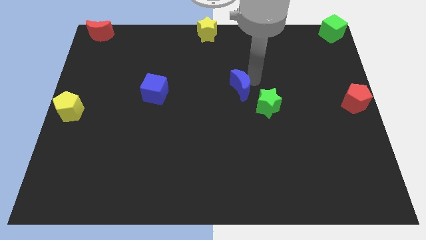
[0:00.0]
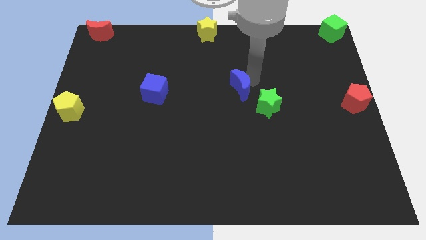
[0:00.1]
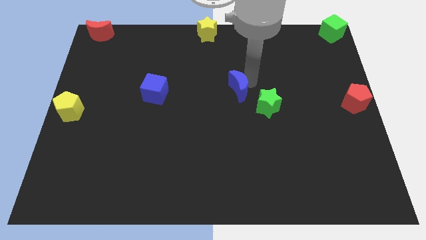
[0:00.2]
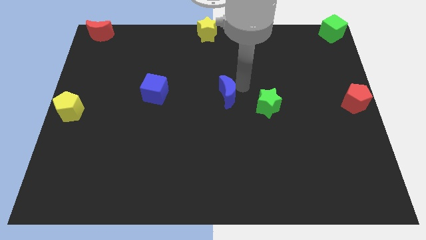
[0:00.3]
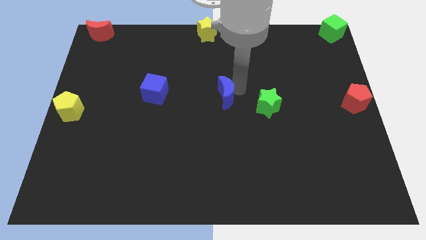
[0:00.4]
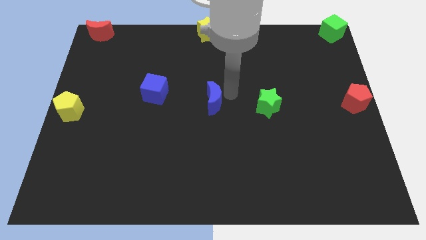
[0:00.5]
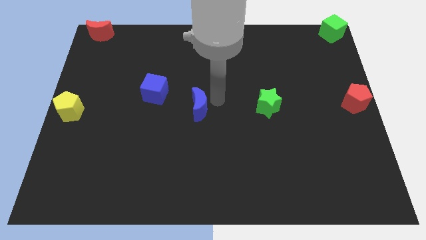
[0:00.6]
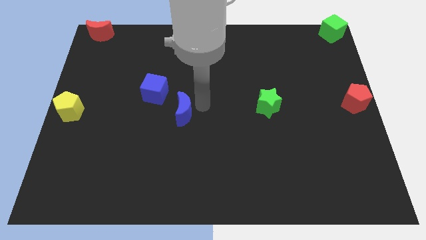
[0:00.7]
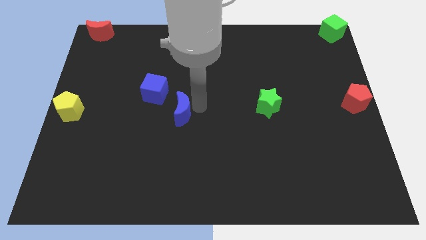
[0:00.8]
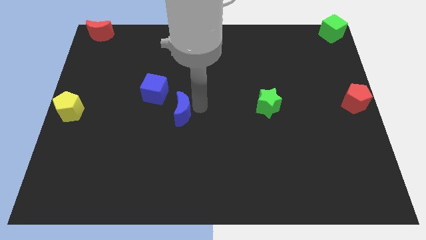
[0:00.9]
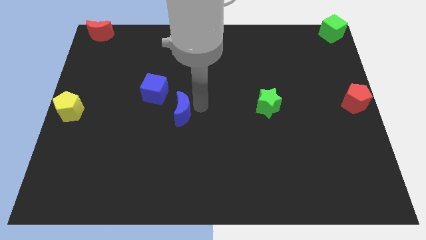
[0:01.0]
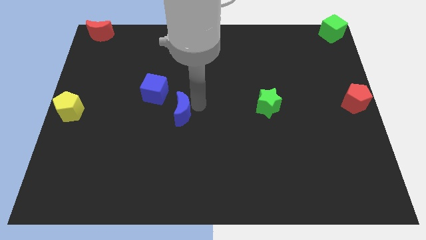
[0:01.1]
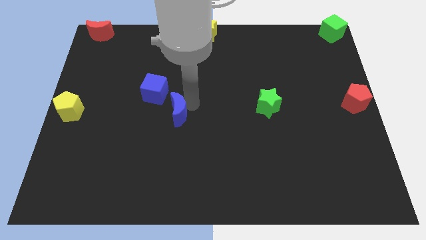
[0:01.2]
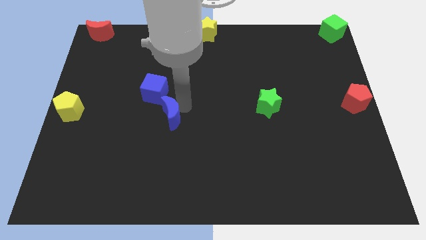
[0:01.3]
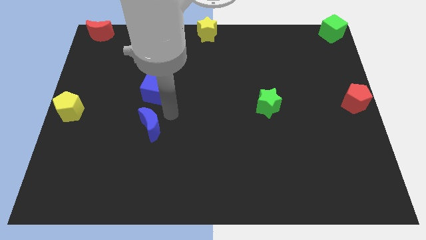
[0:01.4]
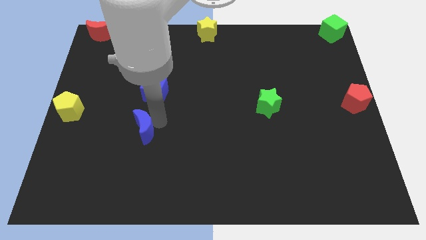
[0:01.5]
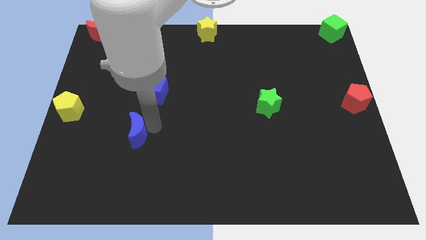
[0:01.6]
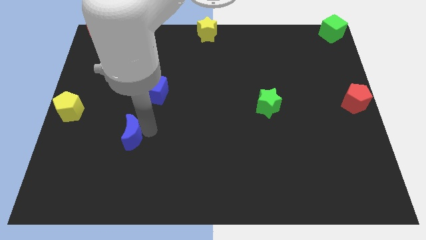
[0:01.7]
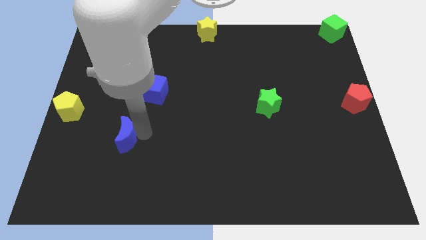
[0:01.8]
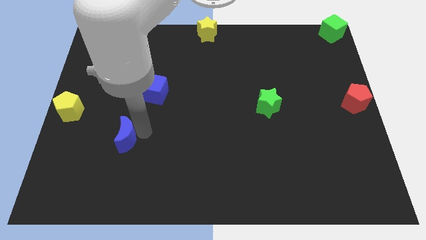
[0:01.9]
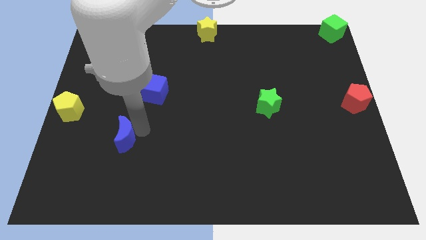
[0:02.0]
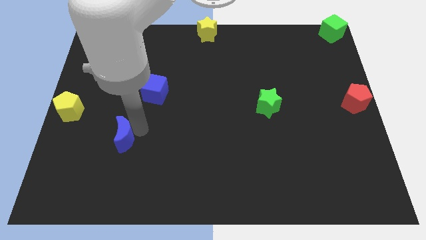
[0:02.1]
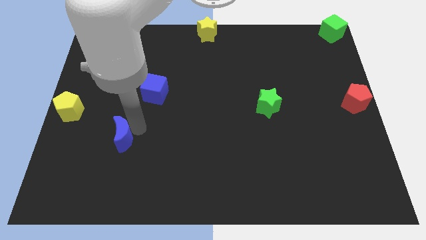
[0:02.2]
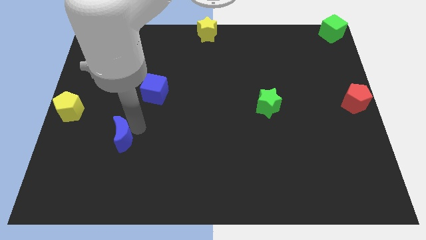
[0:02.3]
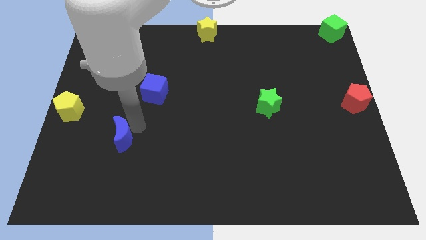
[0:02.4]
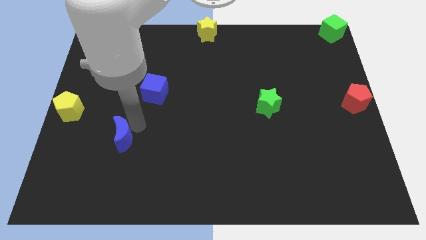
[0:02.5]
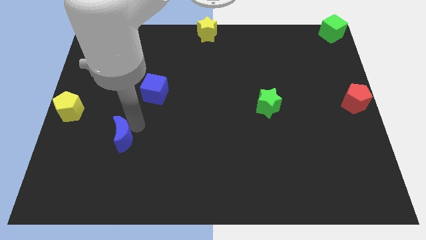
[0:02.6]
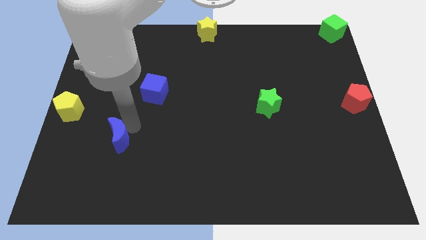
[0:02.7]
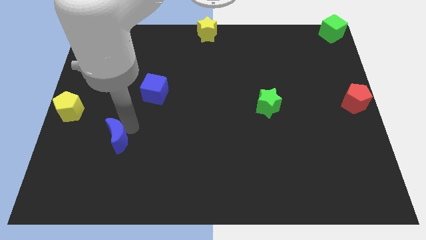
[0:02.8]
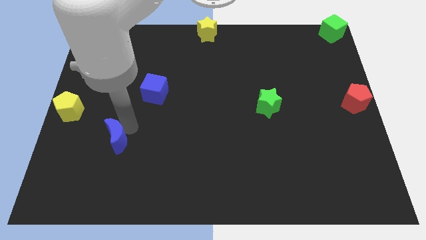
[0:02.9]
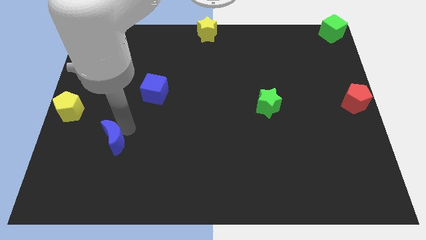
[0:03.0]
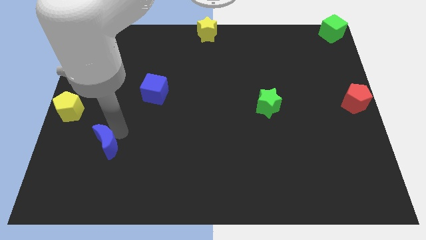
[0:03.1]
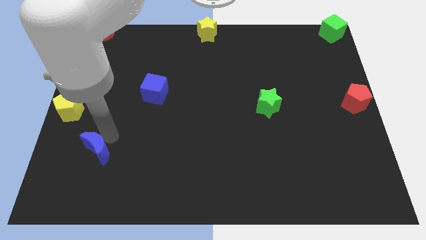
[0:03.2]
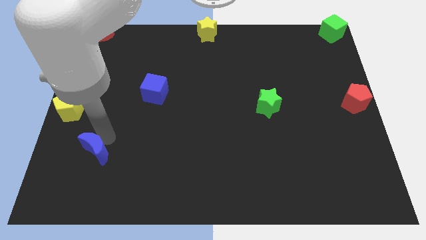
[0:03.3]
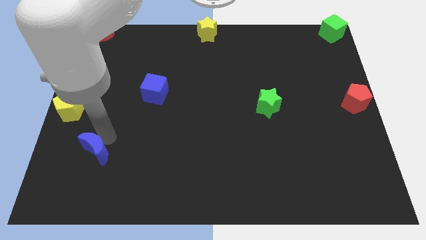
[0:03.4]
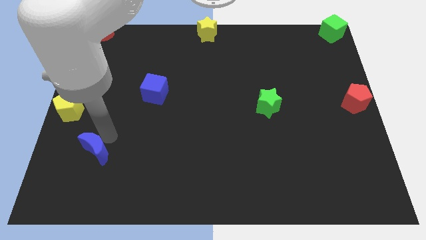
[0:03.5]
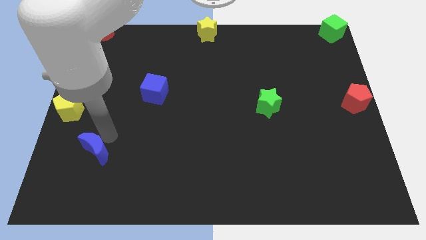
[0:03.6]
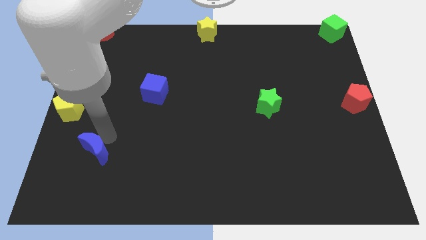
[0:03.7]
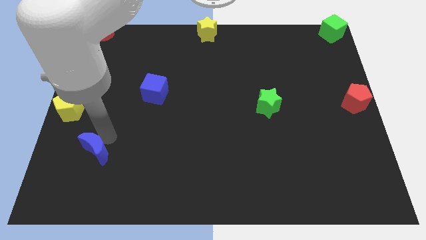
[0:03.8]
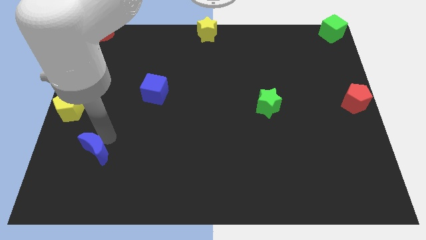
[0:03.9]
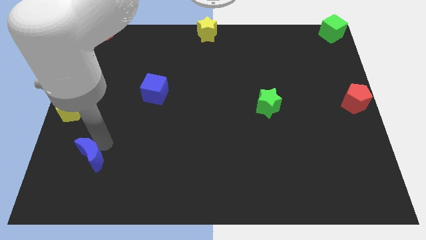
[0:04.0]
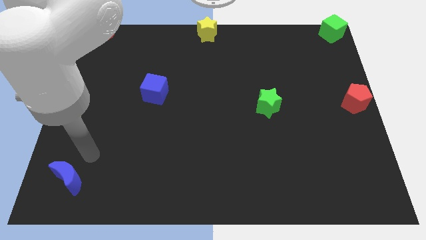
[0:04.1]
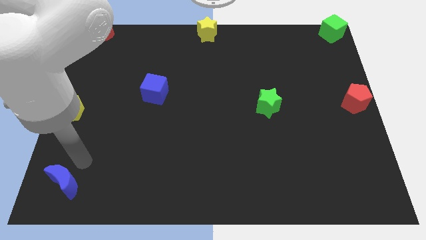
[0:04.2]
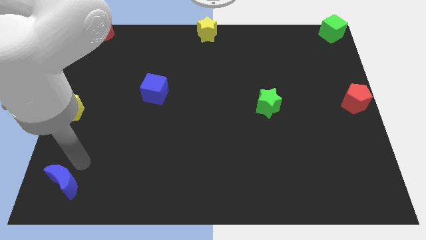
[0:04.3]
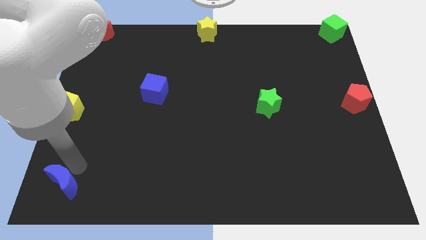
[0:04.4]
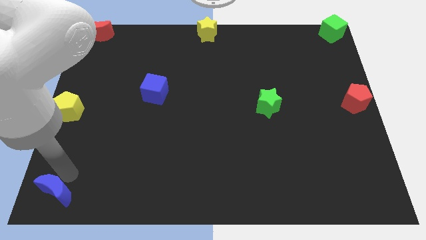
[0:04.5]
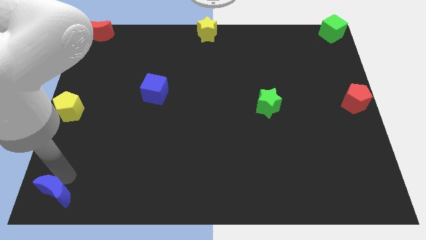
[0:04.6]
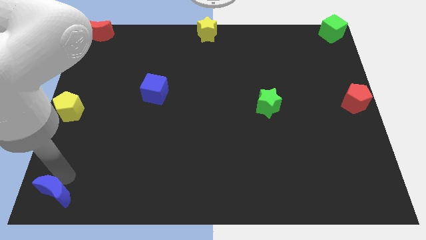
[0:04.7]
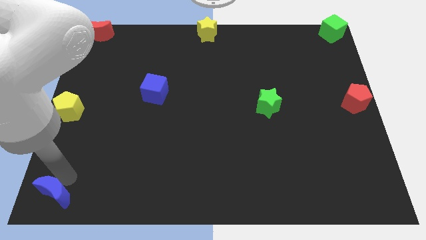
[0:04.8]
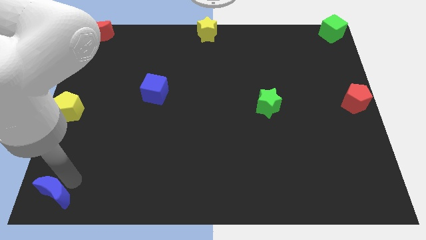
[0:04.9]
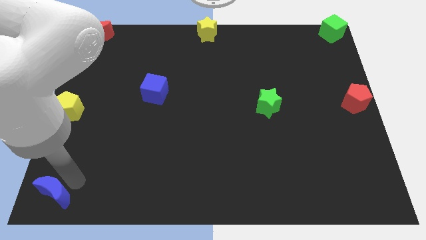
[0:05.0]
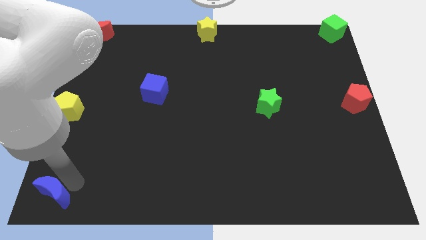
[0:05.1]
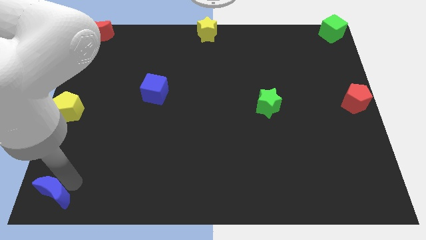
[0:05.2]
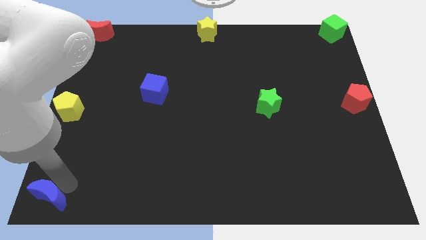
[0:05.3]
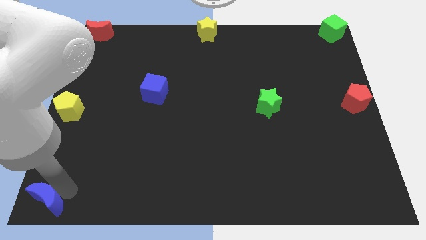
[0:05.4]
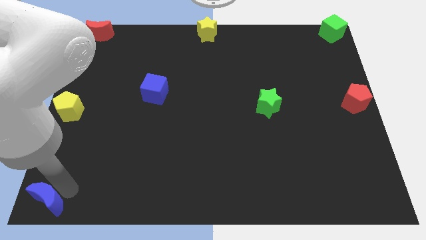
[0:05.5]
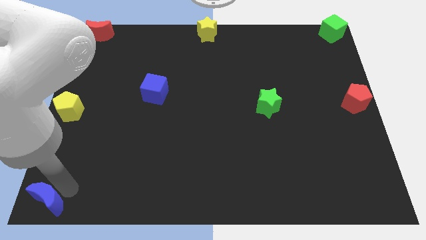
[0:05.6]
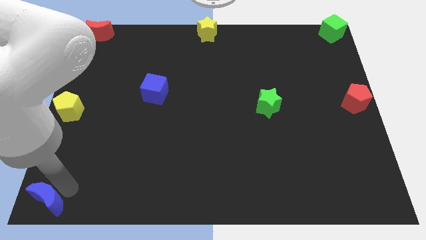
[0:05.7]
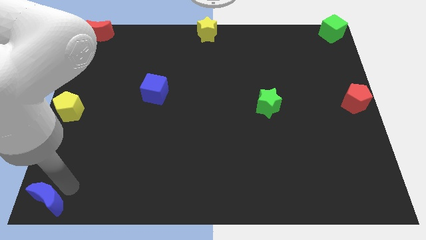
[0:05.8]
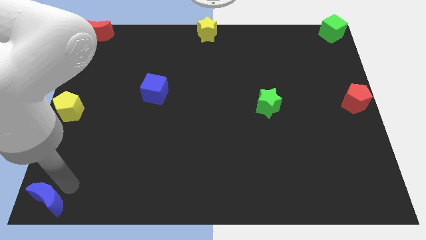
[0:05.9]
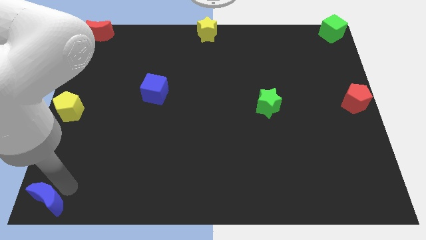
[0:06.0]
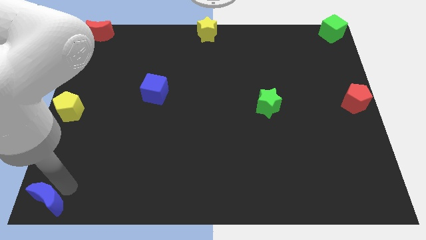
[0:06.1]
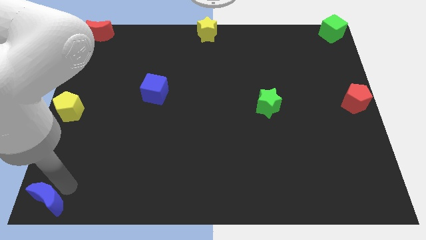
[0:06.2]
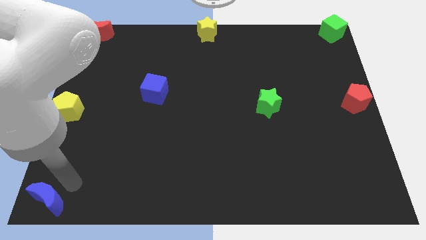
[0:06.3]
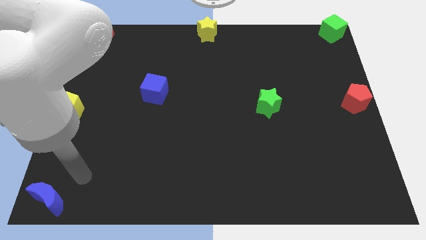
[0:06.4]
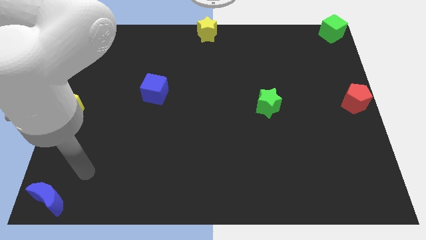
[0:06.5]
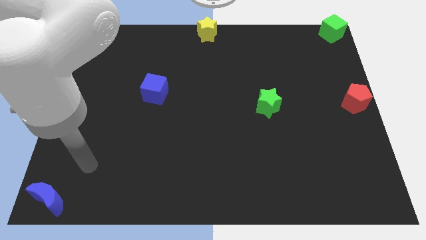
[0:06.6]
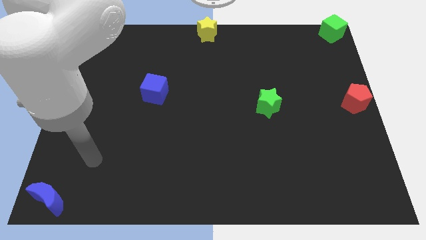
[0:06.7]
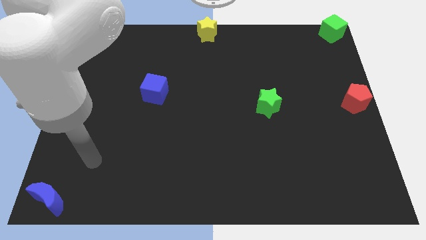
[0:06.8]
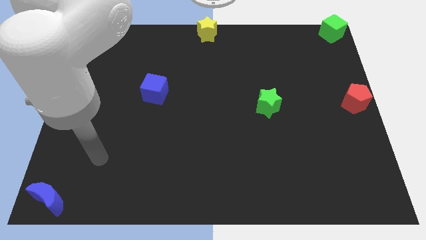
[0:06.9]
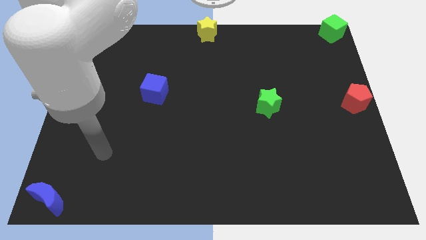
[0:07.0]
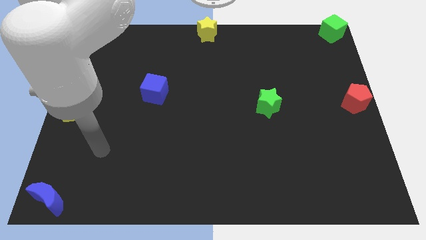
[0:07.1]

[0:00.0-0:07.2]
move the blue crescent at the left side bottom

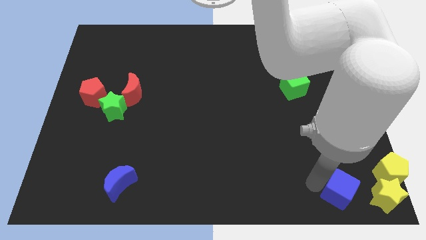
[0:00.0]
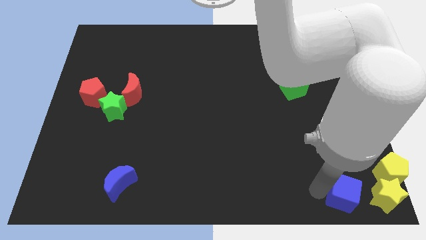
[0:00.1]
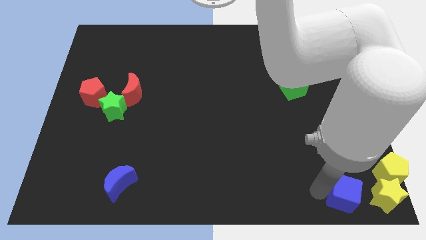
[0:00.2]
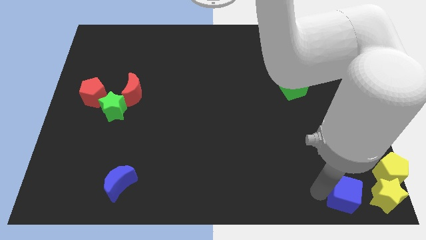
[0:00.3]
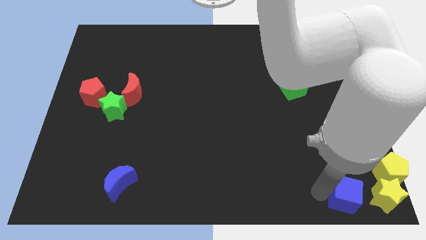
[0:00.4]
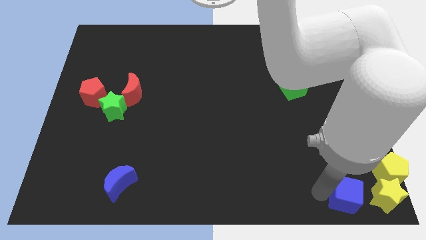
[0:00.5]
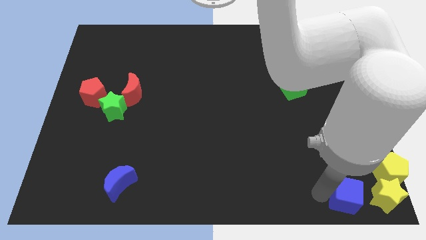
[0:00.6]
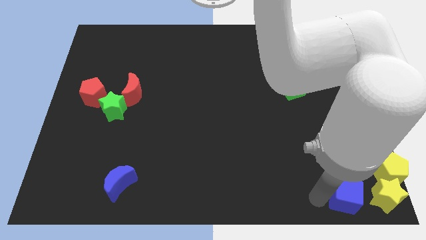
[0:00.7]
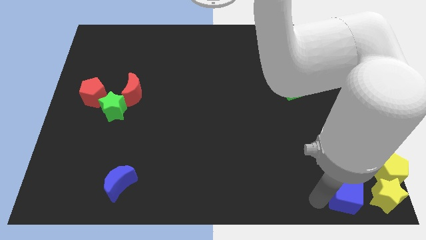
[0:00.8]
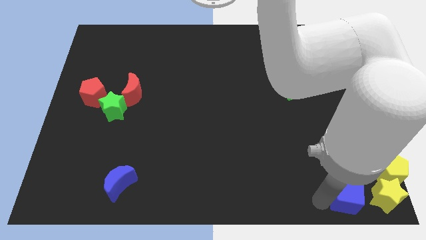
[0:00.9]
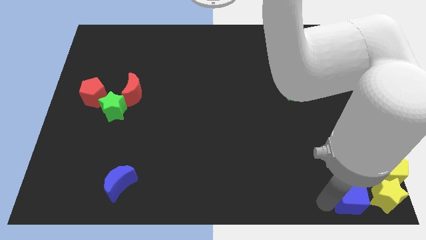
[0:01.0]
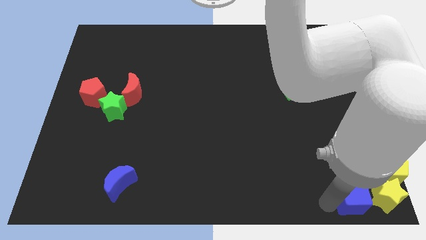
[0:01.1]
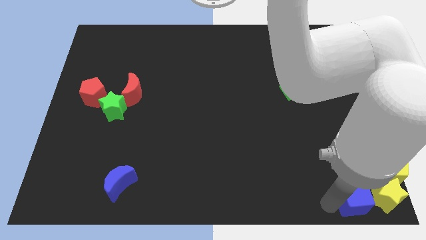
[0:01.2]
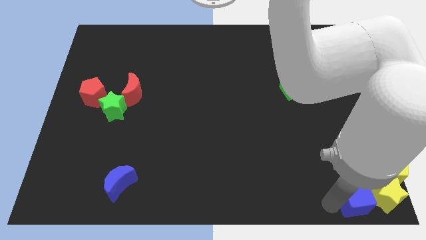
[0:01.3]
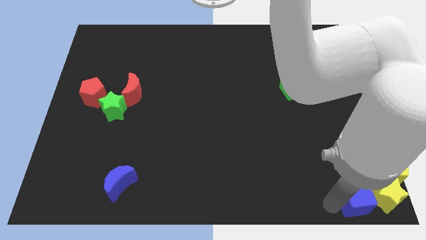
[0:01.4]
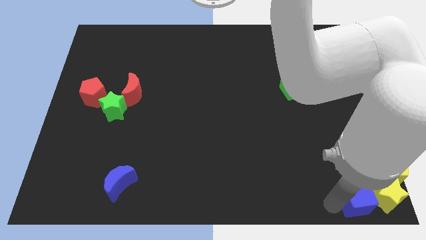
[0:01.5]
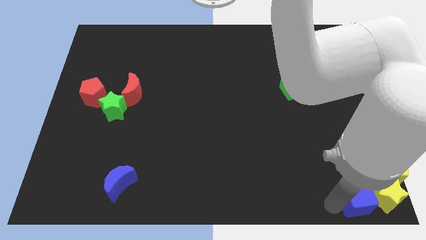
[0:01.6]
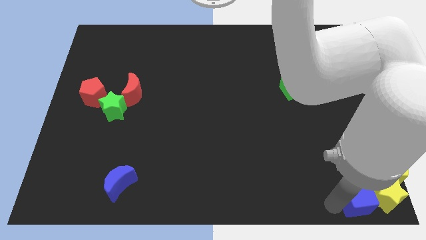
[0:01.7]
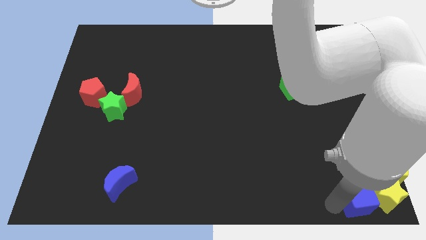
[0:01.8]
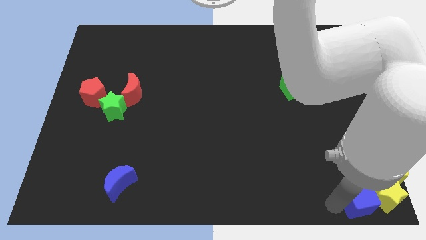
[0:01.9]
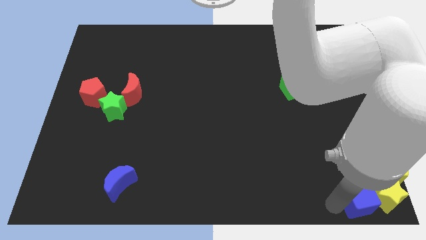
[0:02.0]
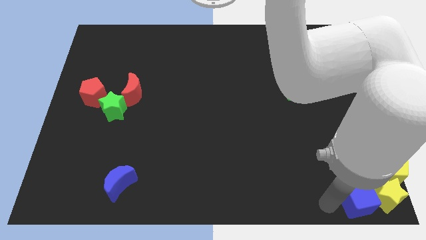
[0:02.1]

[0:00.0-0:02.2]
push the blue cube to the left of the yellow star
